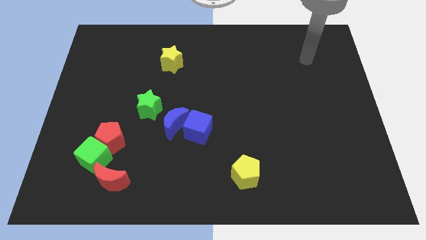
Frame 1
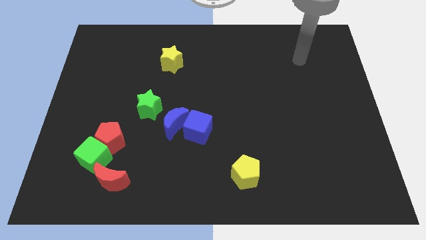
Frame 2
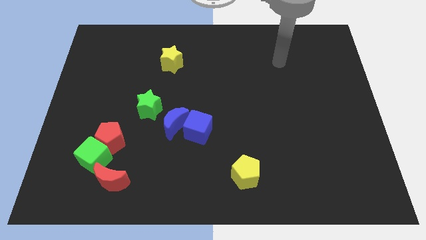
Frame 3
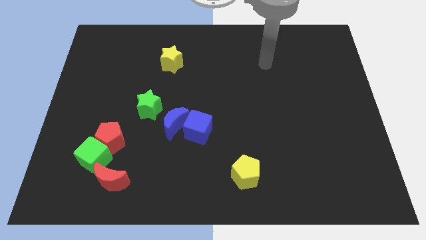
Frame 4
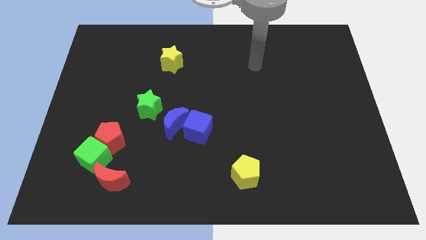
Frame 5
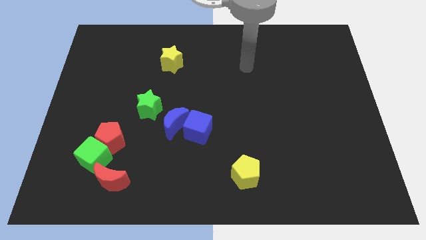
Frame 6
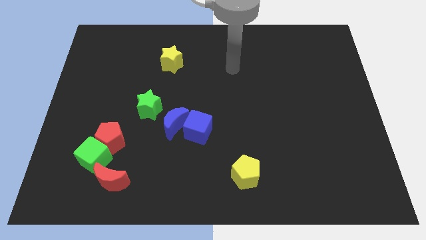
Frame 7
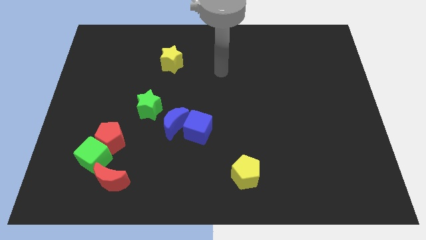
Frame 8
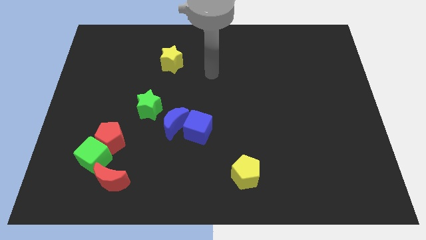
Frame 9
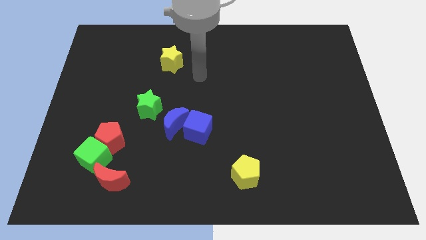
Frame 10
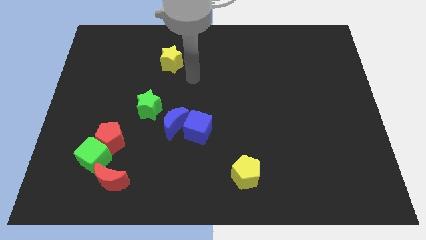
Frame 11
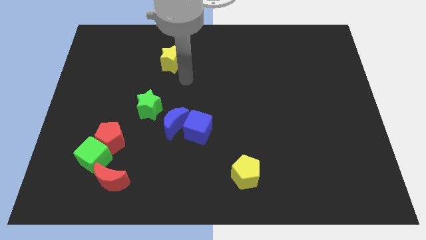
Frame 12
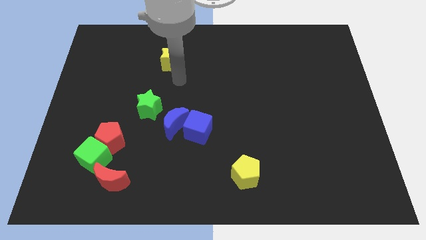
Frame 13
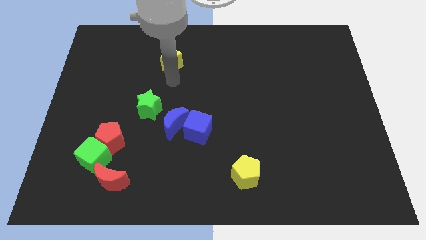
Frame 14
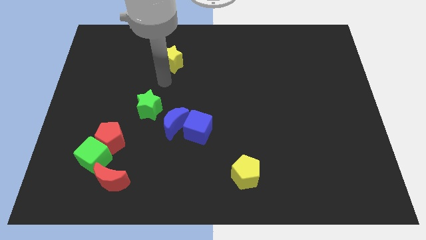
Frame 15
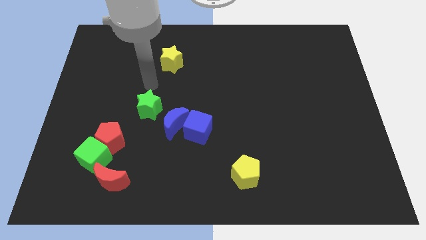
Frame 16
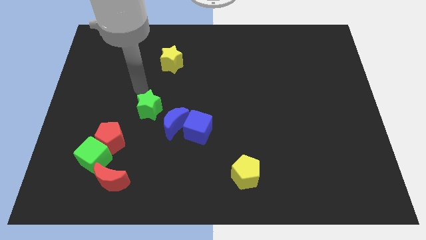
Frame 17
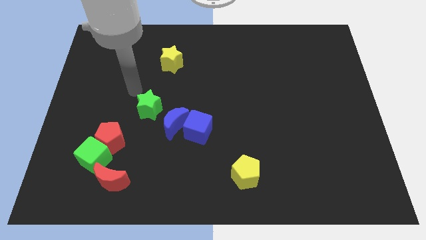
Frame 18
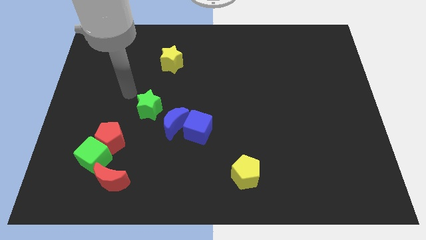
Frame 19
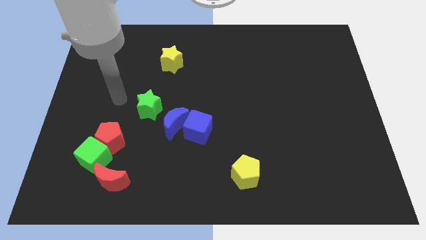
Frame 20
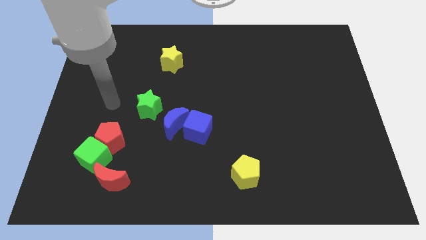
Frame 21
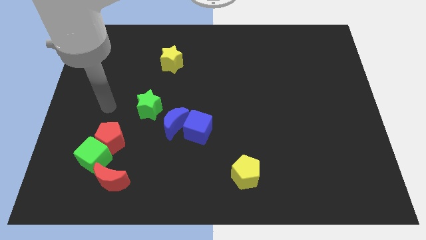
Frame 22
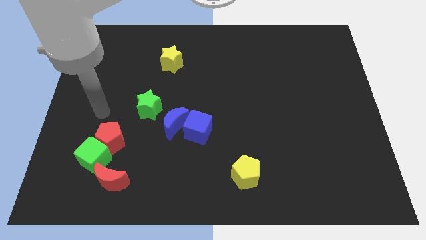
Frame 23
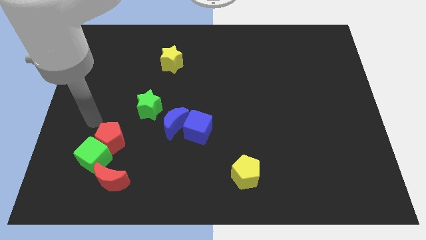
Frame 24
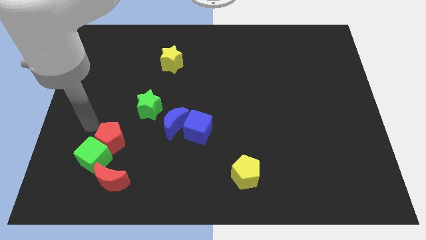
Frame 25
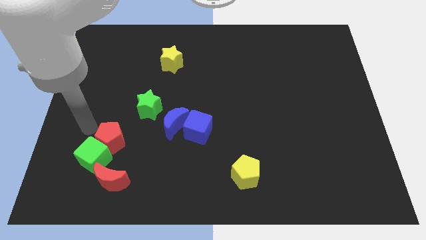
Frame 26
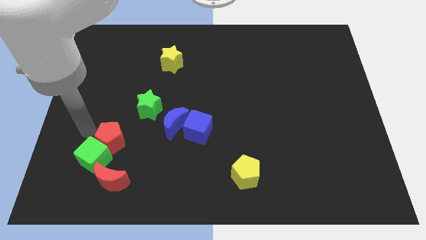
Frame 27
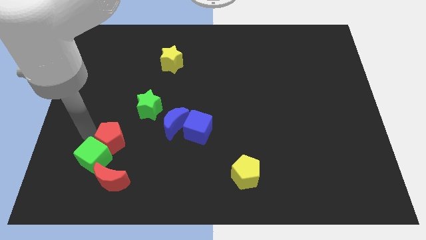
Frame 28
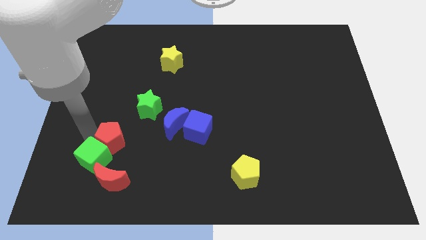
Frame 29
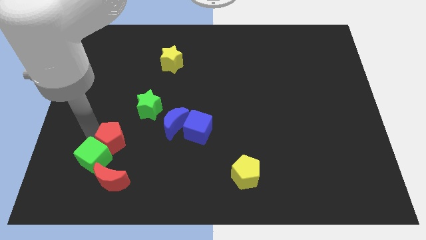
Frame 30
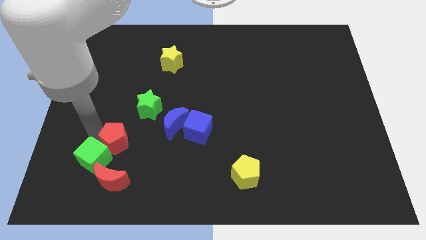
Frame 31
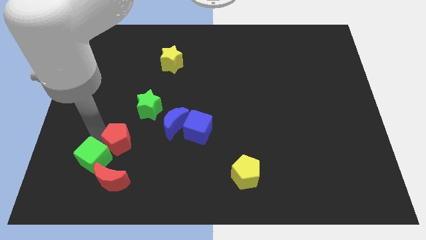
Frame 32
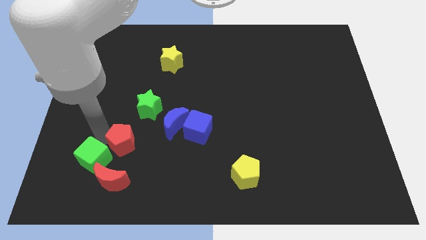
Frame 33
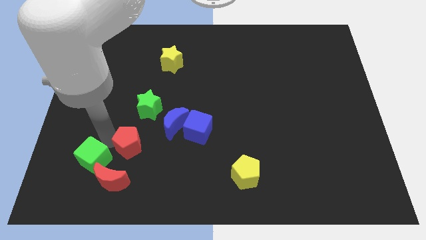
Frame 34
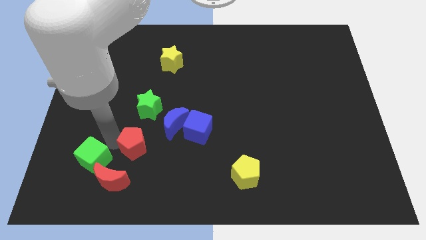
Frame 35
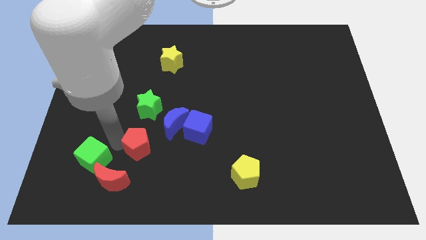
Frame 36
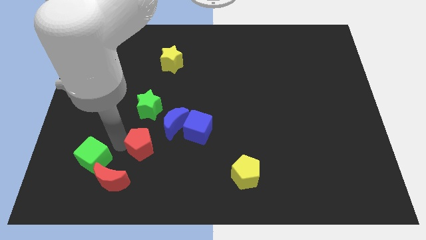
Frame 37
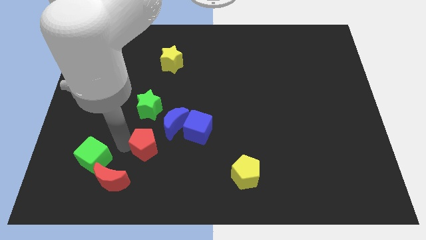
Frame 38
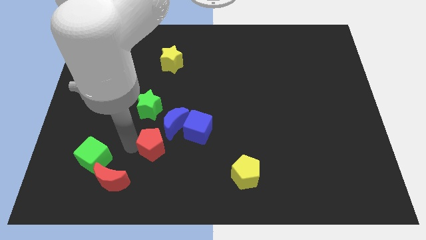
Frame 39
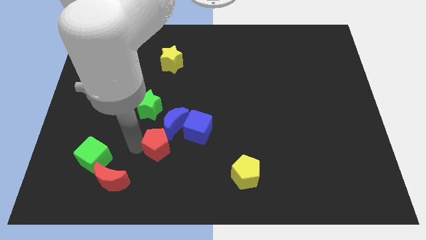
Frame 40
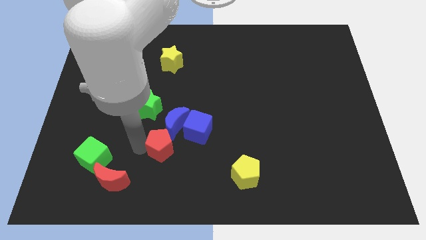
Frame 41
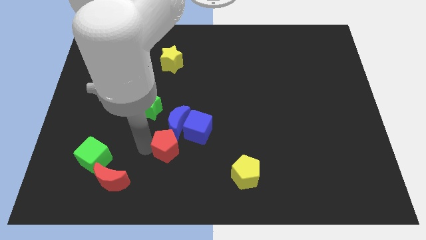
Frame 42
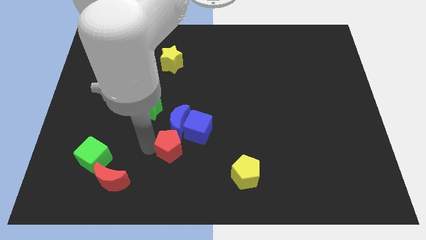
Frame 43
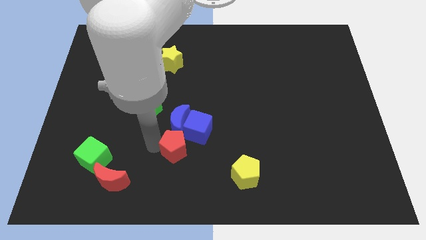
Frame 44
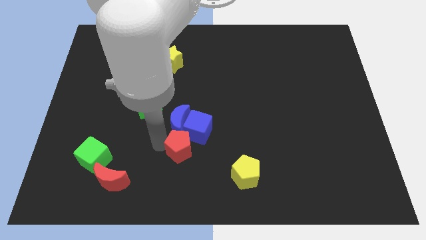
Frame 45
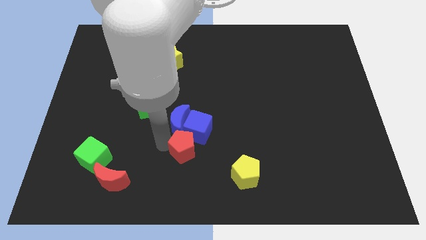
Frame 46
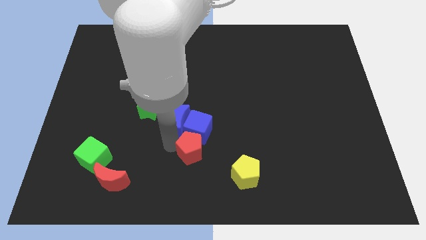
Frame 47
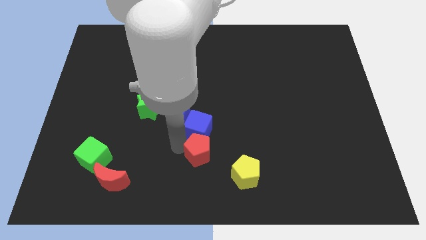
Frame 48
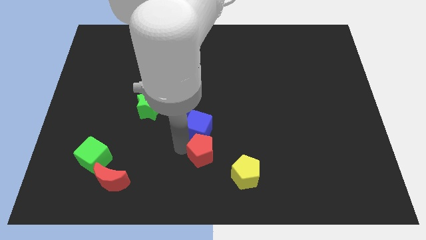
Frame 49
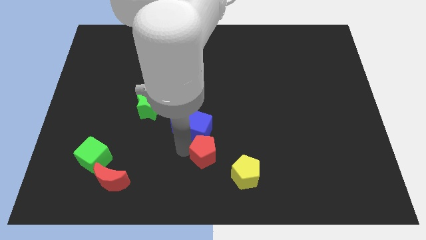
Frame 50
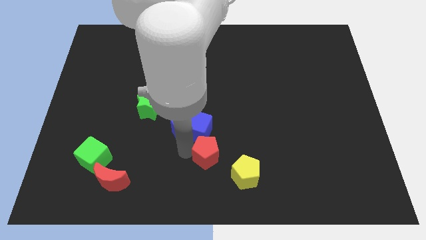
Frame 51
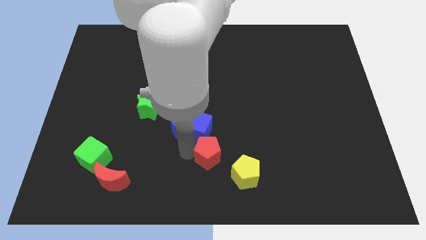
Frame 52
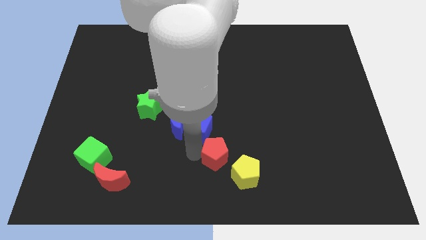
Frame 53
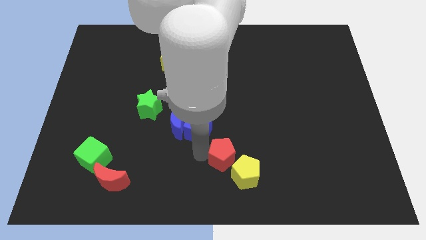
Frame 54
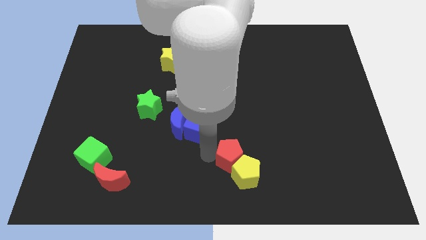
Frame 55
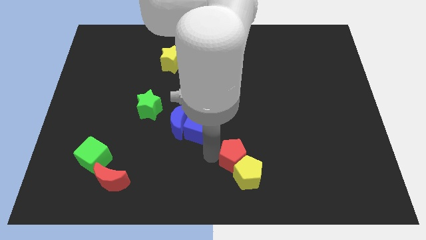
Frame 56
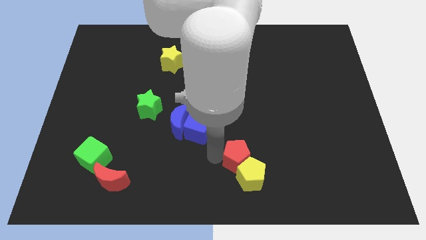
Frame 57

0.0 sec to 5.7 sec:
push the red pentagon towards the yellow pentagon

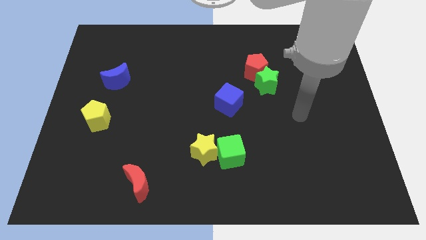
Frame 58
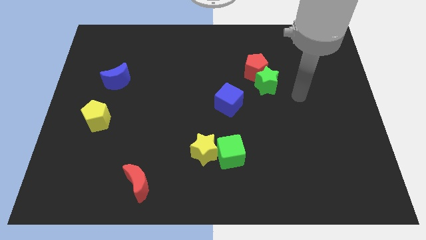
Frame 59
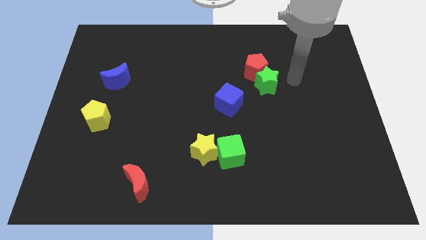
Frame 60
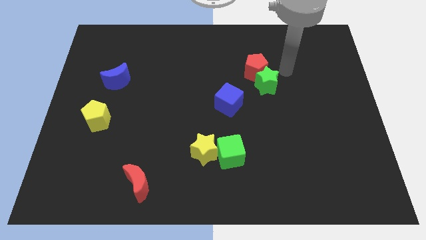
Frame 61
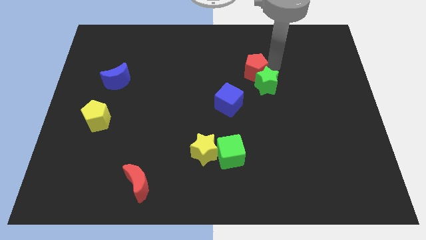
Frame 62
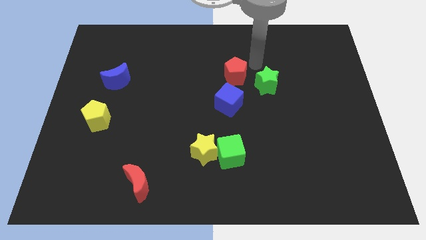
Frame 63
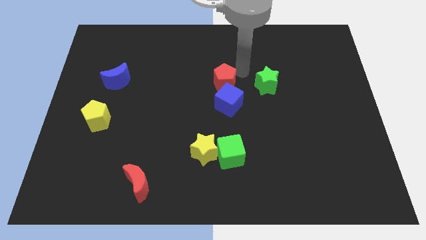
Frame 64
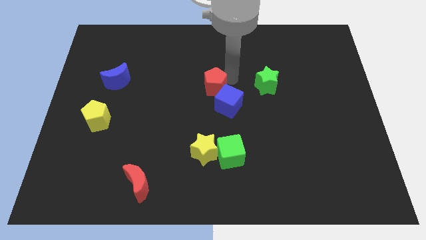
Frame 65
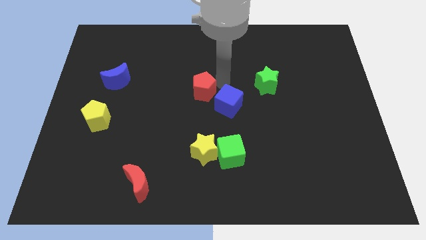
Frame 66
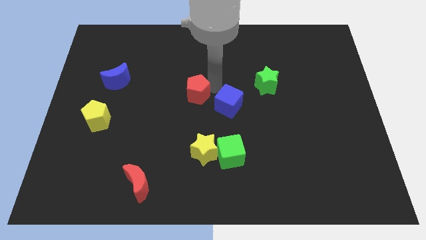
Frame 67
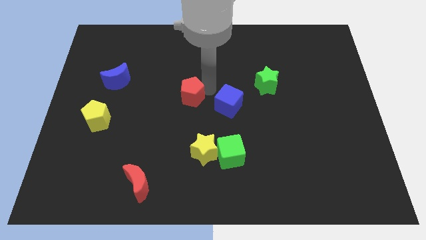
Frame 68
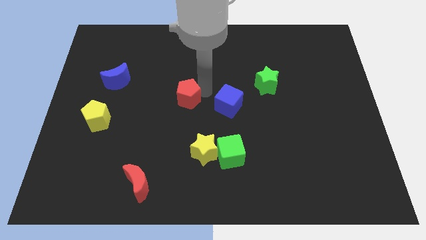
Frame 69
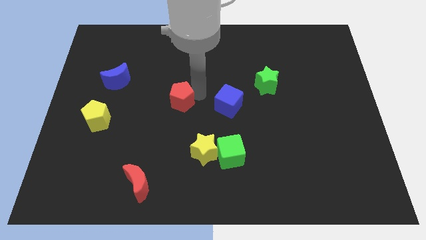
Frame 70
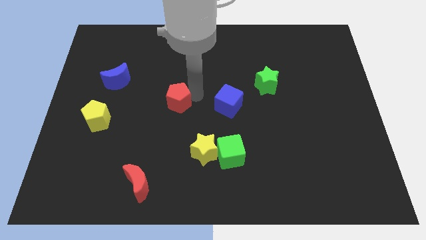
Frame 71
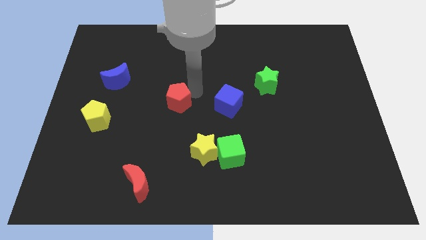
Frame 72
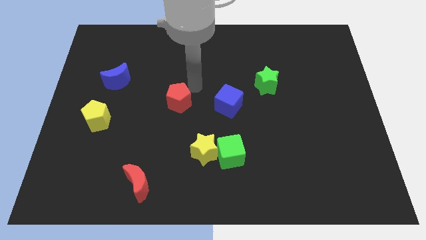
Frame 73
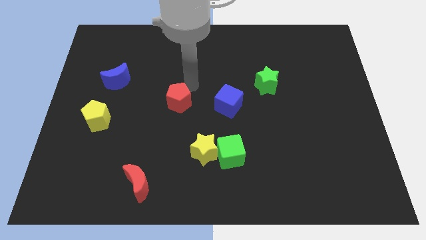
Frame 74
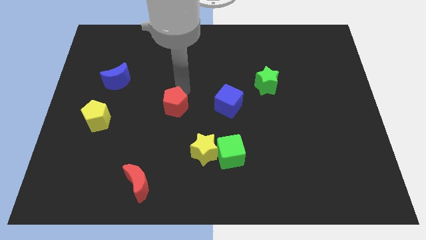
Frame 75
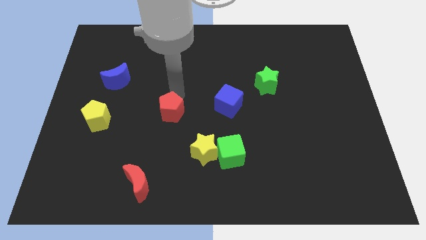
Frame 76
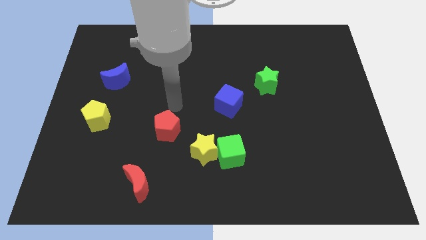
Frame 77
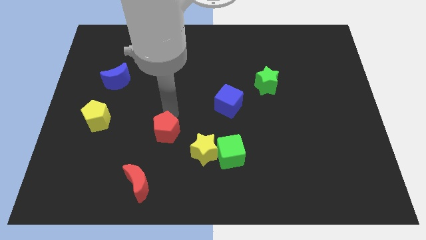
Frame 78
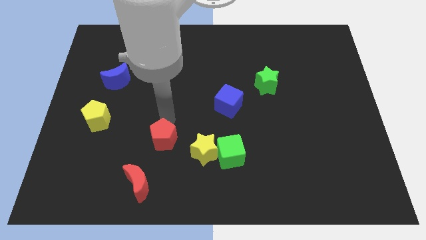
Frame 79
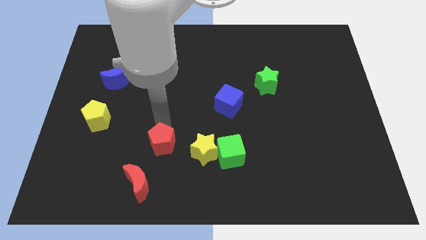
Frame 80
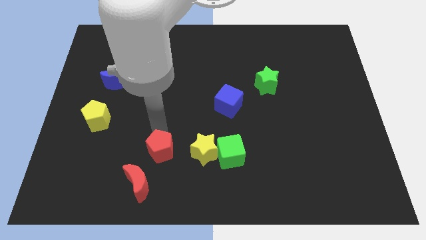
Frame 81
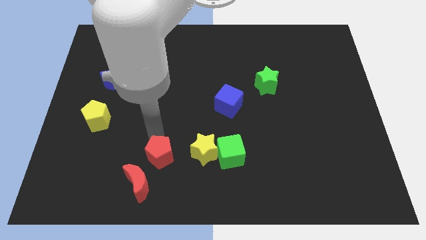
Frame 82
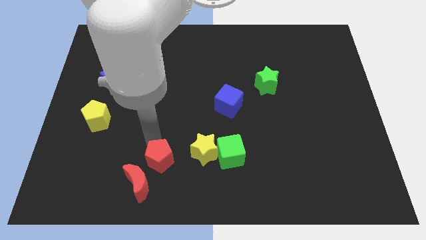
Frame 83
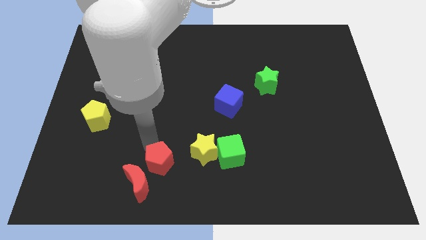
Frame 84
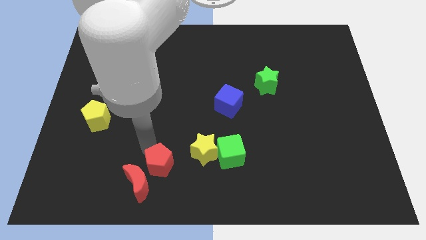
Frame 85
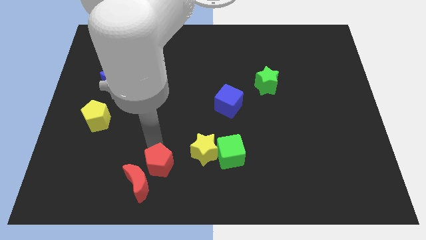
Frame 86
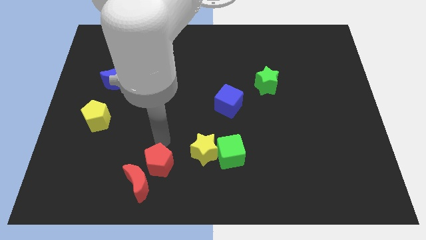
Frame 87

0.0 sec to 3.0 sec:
put the red pentagon next to the red moon
